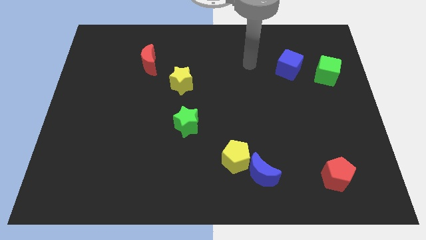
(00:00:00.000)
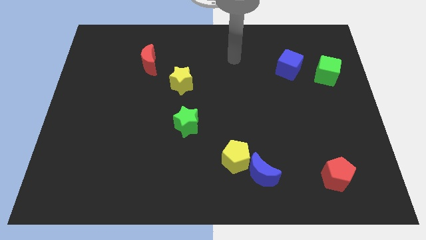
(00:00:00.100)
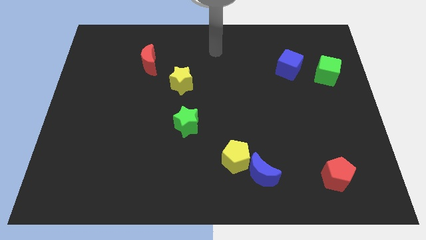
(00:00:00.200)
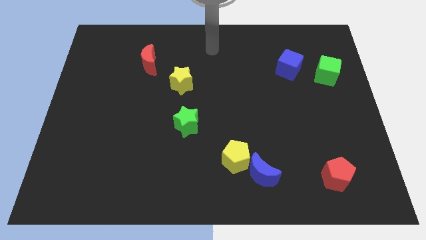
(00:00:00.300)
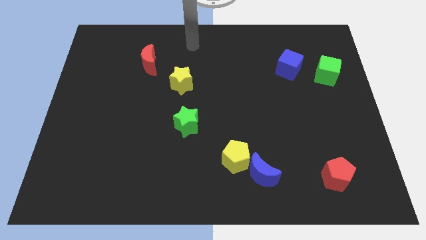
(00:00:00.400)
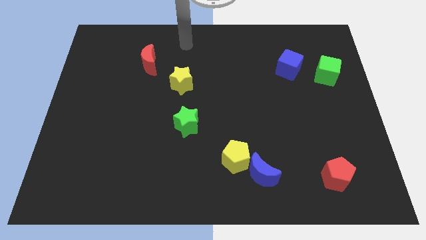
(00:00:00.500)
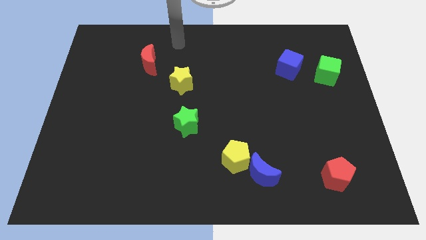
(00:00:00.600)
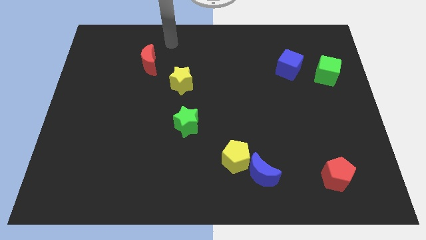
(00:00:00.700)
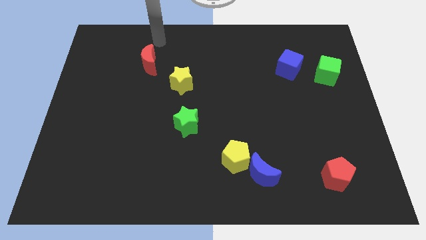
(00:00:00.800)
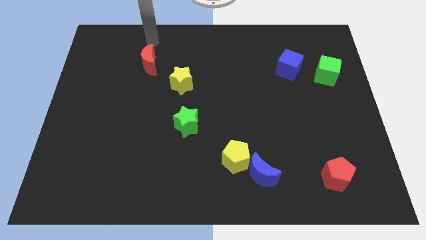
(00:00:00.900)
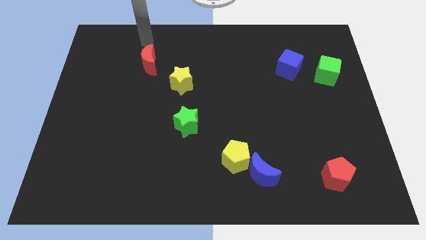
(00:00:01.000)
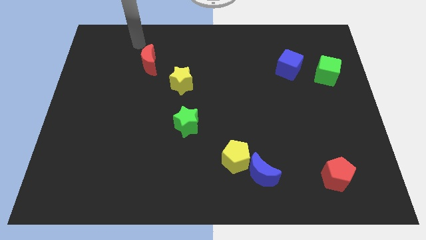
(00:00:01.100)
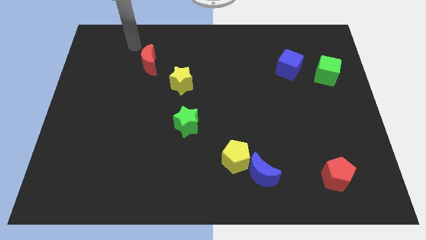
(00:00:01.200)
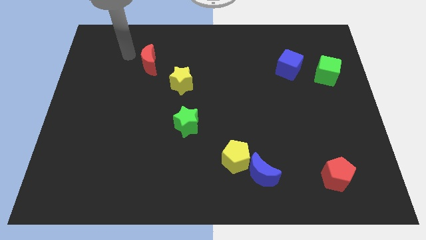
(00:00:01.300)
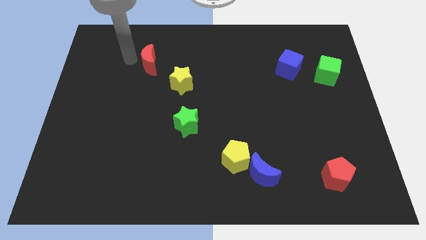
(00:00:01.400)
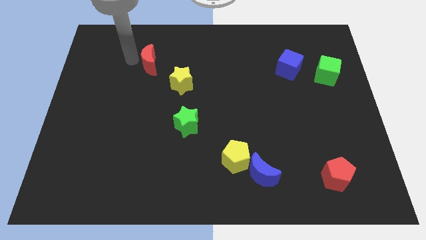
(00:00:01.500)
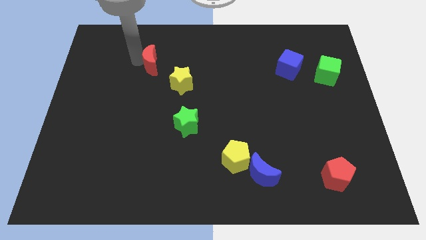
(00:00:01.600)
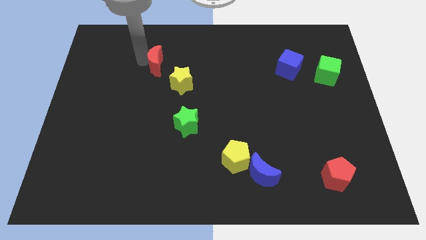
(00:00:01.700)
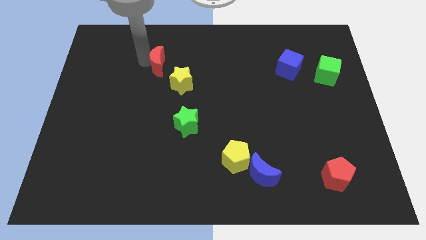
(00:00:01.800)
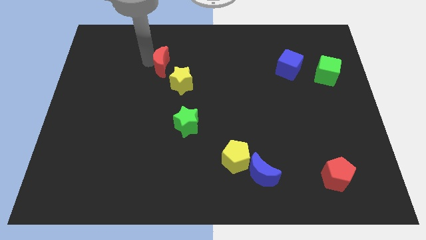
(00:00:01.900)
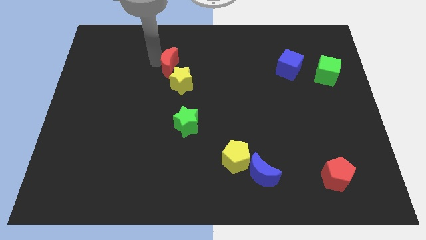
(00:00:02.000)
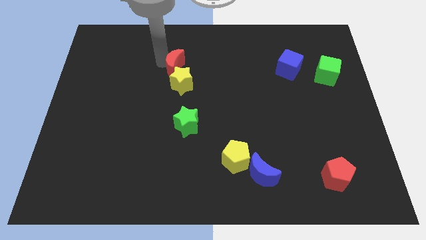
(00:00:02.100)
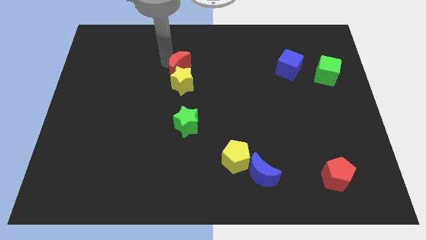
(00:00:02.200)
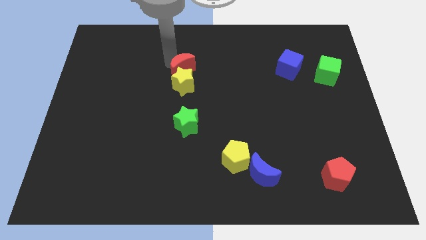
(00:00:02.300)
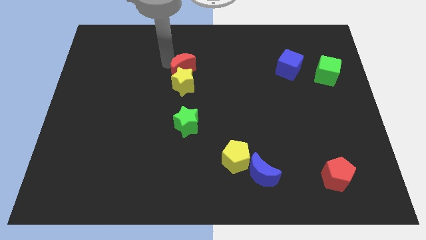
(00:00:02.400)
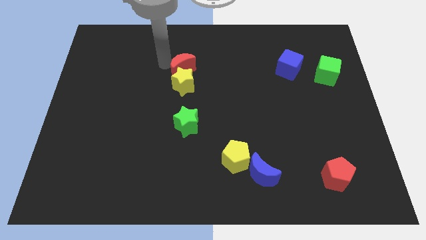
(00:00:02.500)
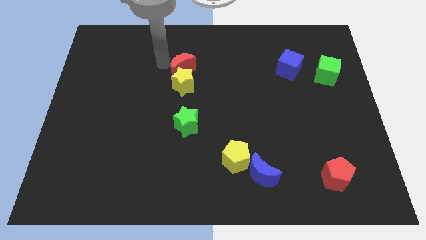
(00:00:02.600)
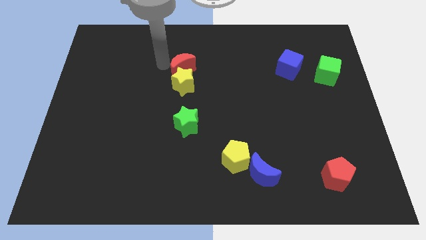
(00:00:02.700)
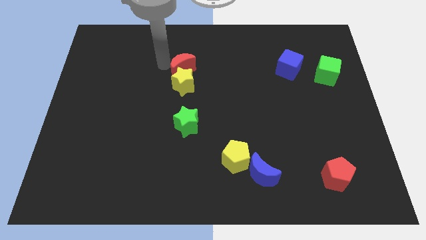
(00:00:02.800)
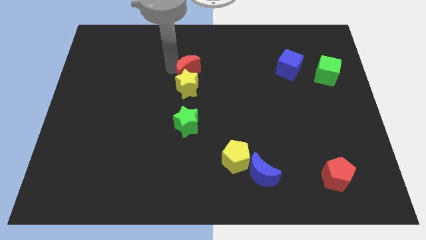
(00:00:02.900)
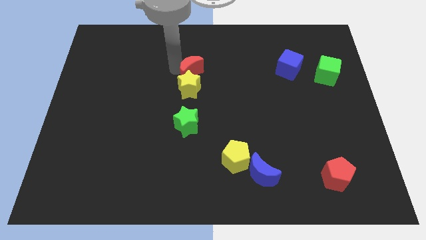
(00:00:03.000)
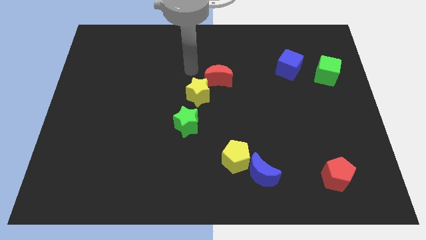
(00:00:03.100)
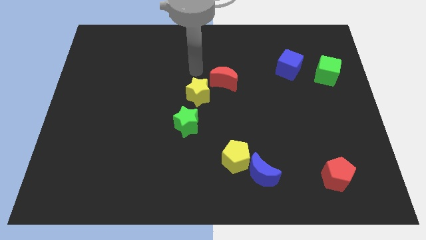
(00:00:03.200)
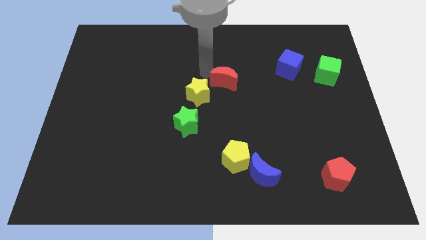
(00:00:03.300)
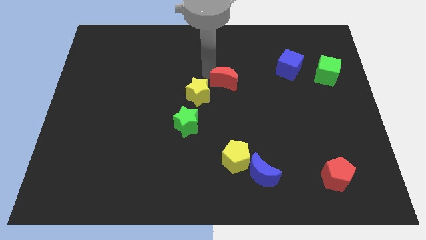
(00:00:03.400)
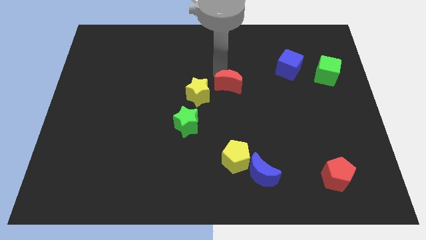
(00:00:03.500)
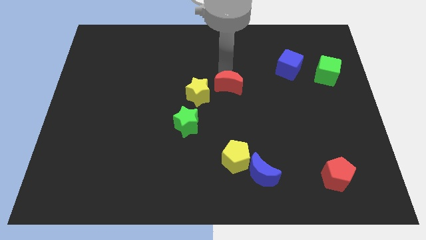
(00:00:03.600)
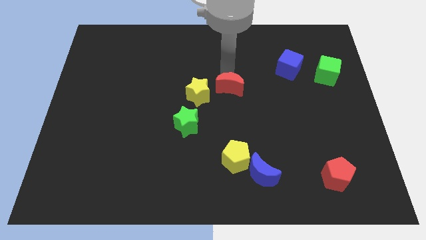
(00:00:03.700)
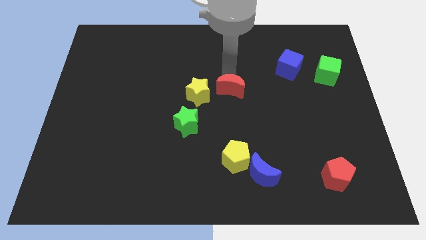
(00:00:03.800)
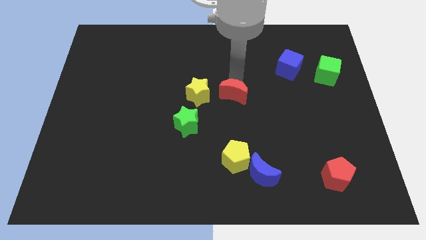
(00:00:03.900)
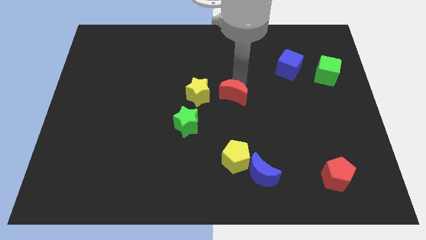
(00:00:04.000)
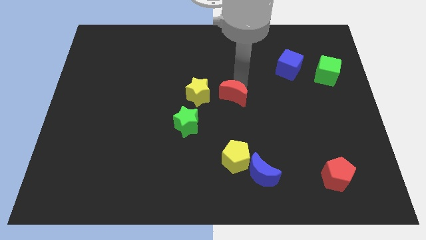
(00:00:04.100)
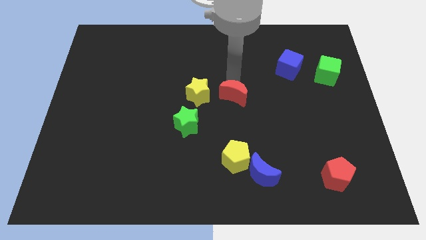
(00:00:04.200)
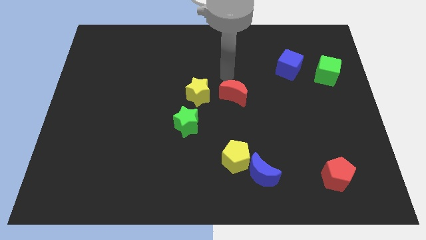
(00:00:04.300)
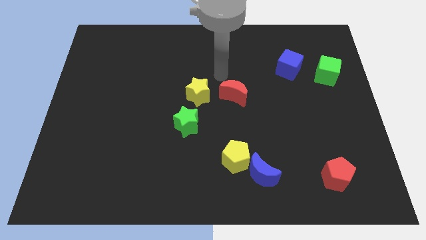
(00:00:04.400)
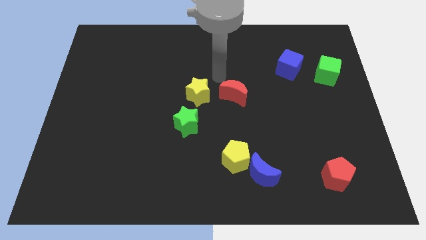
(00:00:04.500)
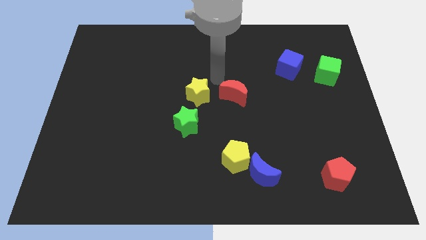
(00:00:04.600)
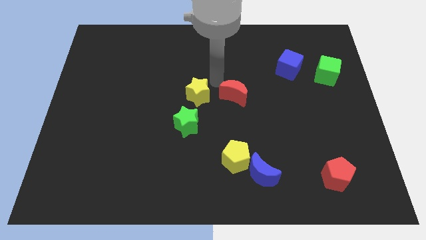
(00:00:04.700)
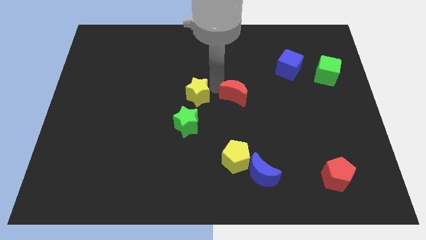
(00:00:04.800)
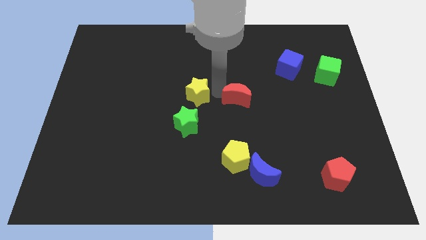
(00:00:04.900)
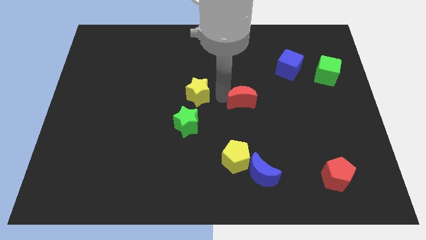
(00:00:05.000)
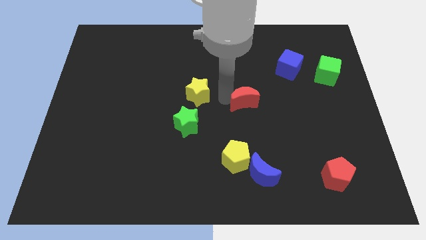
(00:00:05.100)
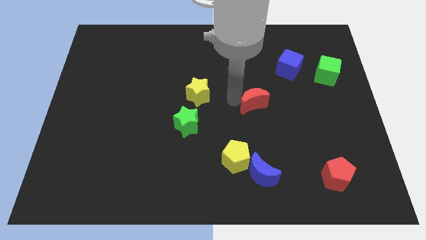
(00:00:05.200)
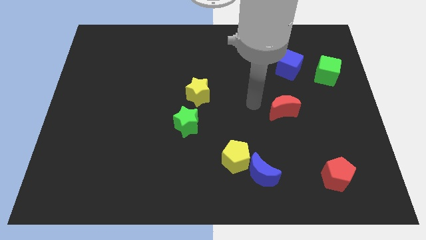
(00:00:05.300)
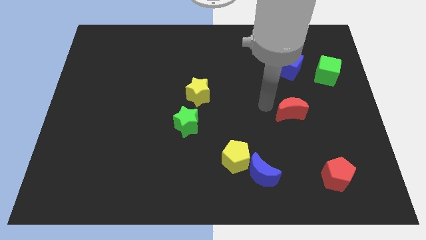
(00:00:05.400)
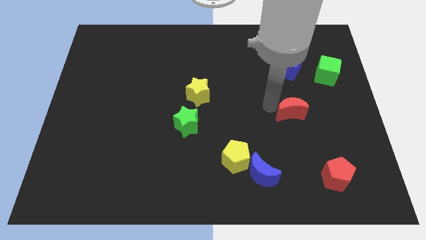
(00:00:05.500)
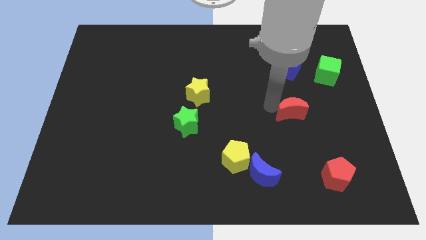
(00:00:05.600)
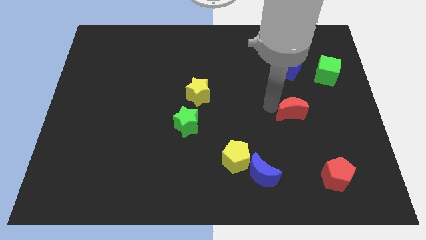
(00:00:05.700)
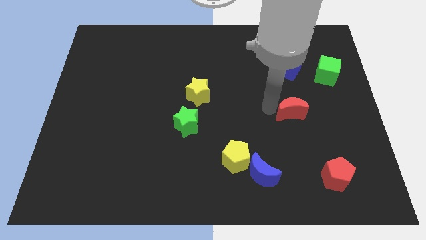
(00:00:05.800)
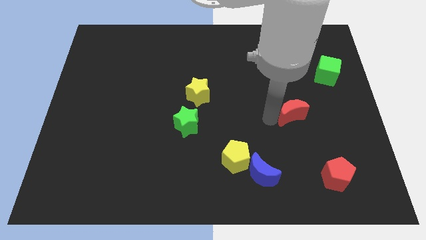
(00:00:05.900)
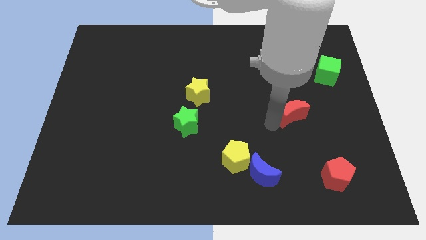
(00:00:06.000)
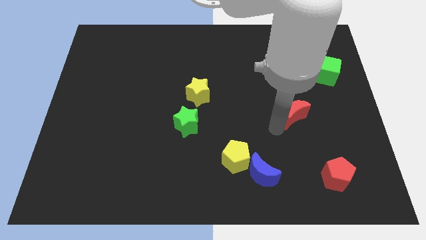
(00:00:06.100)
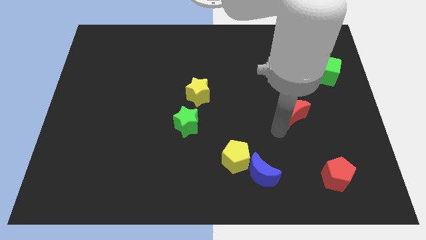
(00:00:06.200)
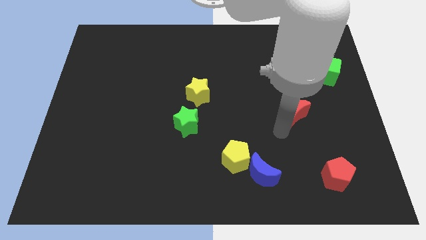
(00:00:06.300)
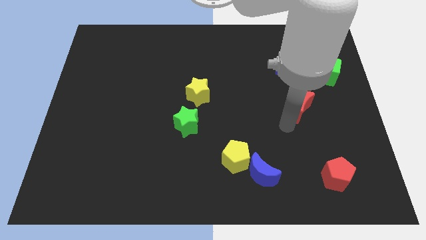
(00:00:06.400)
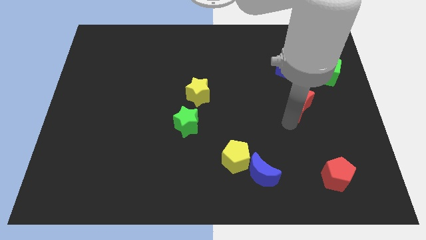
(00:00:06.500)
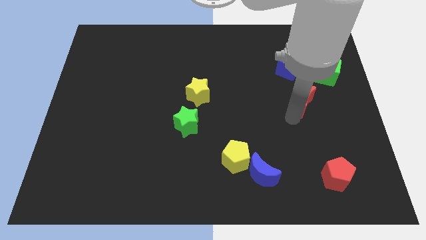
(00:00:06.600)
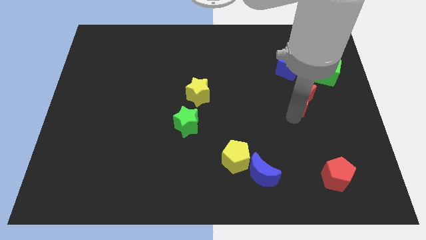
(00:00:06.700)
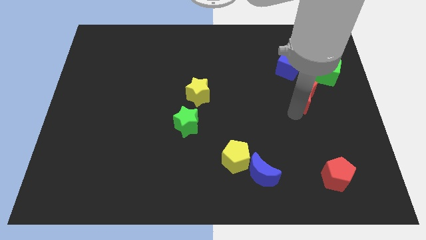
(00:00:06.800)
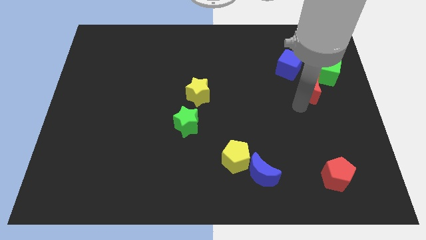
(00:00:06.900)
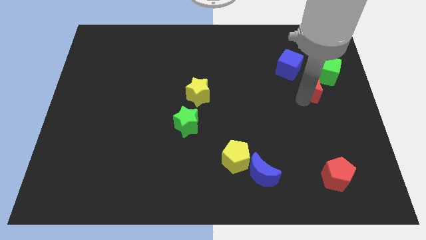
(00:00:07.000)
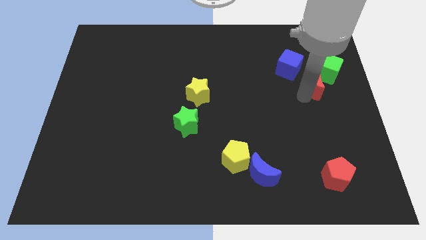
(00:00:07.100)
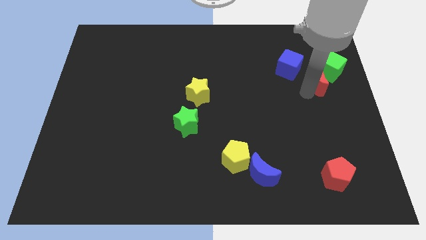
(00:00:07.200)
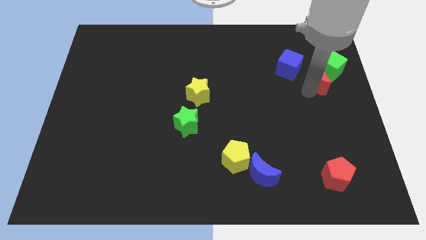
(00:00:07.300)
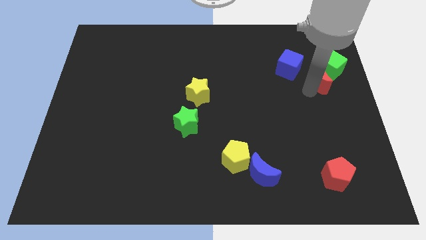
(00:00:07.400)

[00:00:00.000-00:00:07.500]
put the red moon towards the green cube

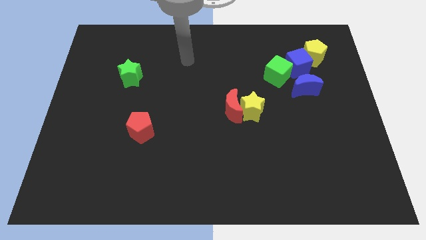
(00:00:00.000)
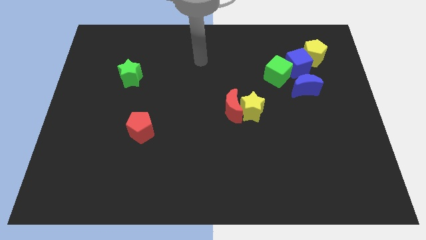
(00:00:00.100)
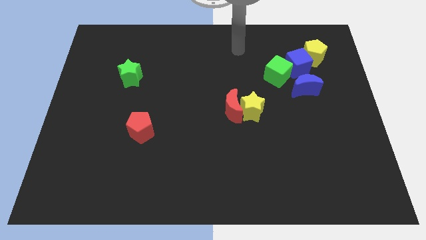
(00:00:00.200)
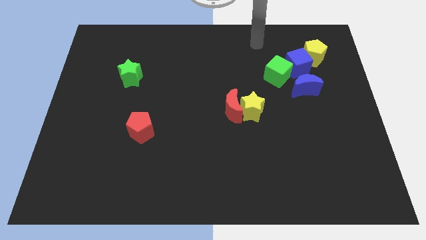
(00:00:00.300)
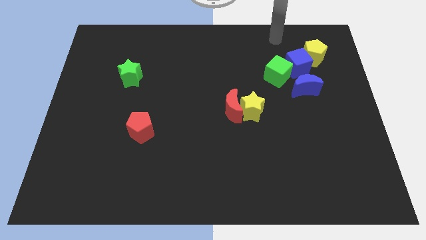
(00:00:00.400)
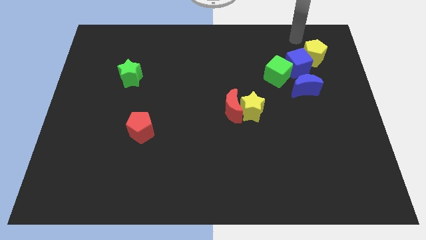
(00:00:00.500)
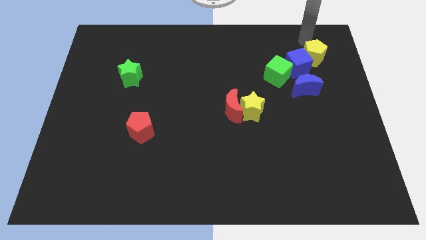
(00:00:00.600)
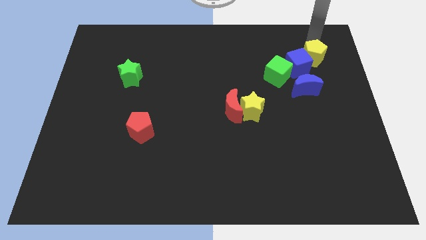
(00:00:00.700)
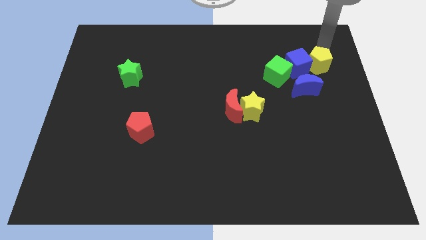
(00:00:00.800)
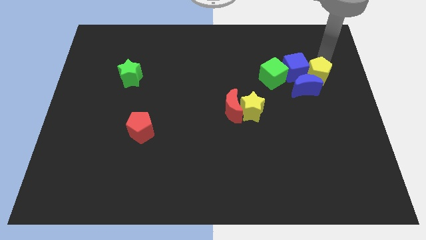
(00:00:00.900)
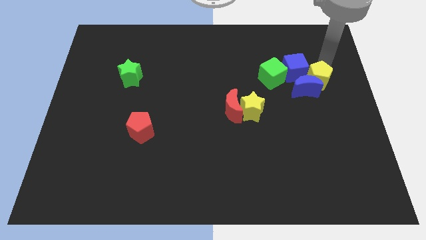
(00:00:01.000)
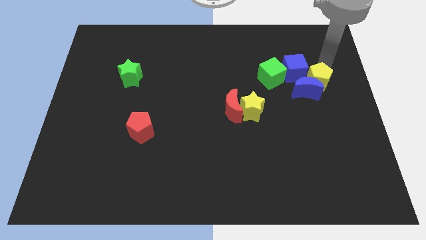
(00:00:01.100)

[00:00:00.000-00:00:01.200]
move the yellow pentagon close to the blue moon
